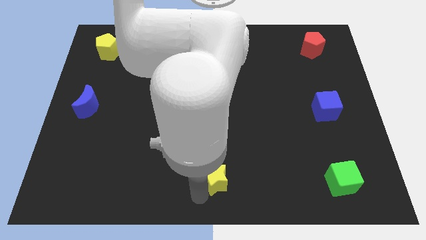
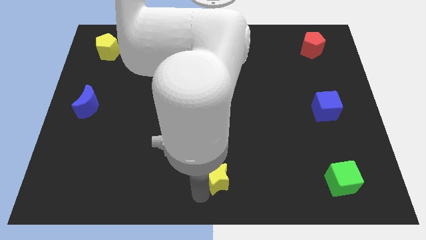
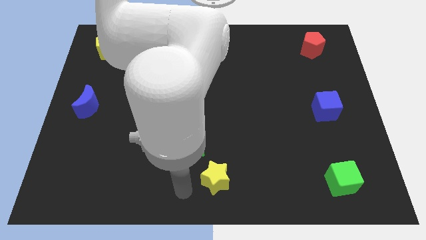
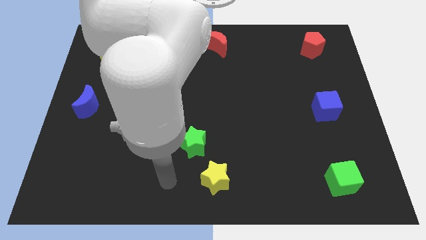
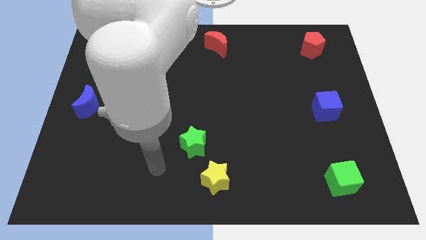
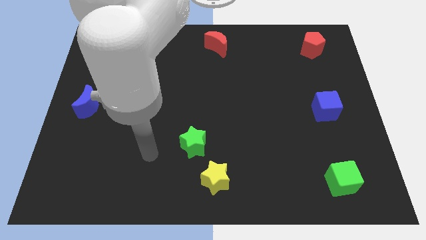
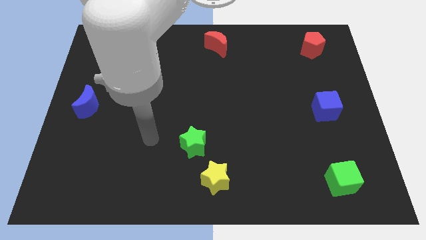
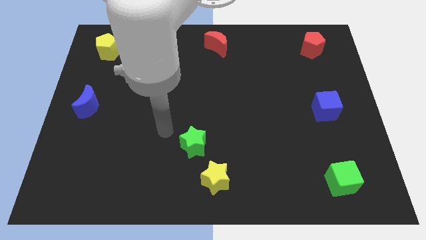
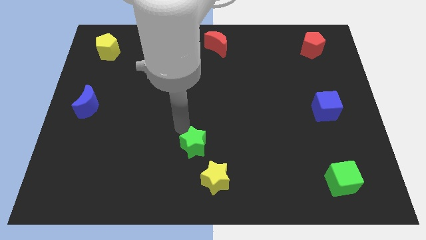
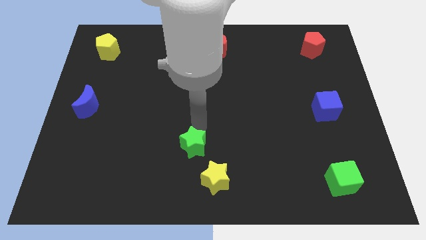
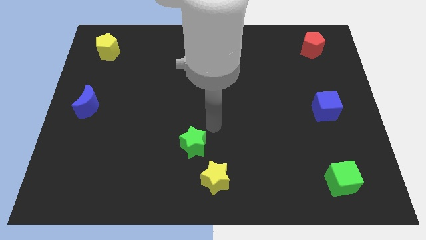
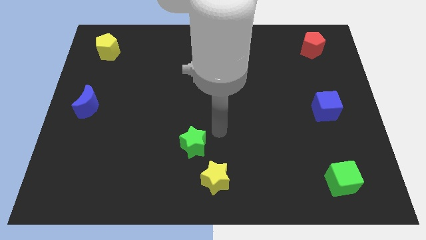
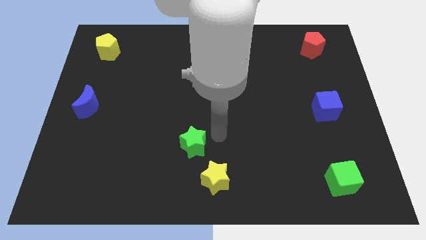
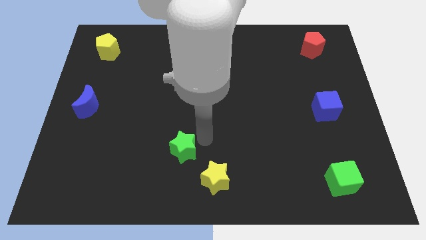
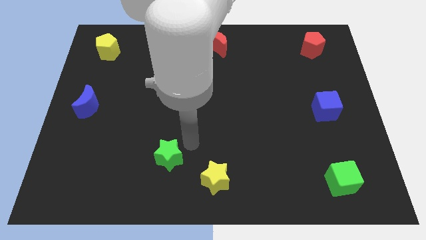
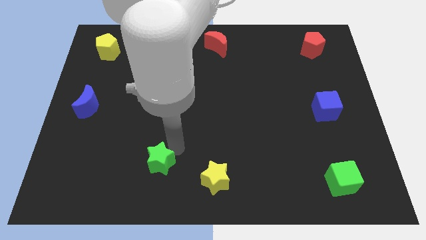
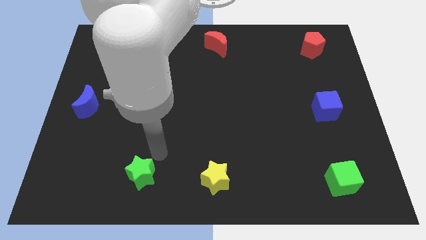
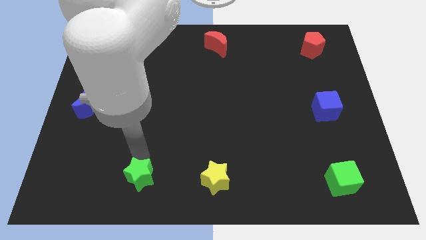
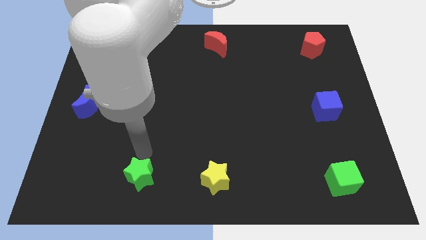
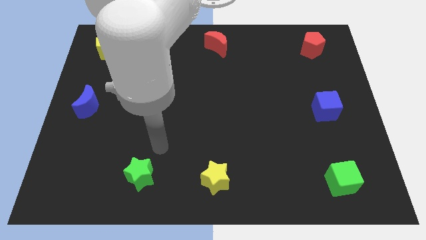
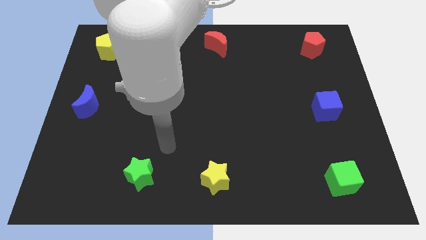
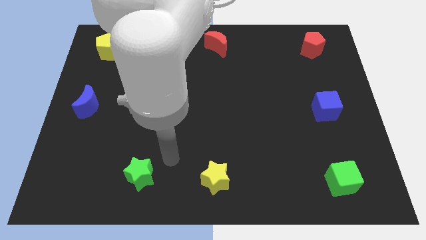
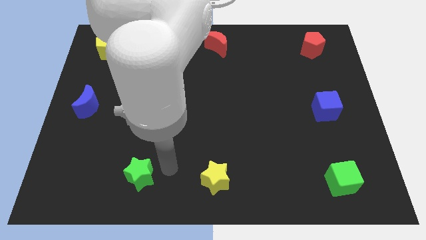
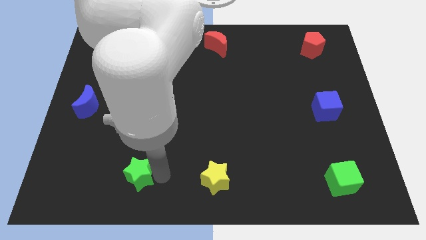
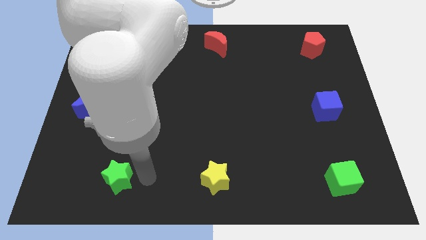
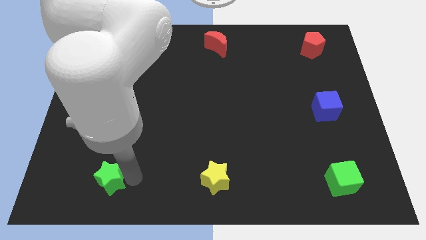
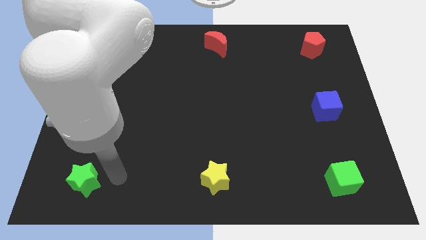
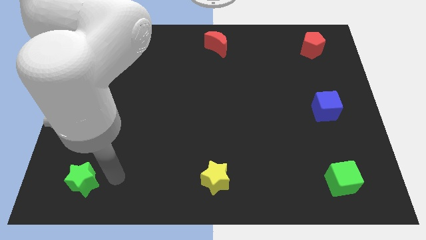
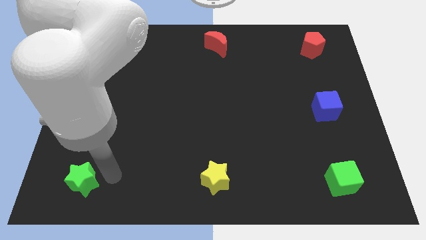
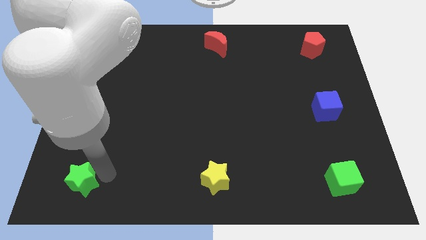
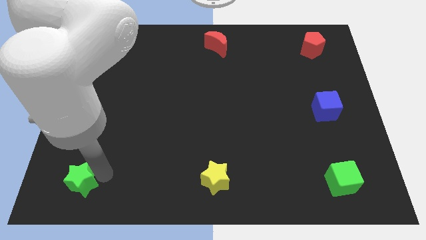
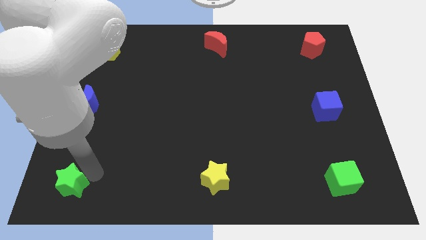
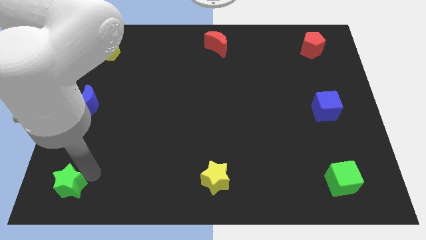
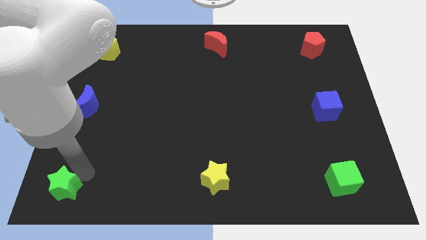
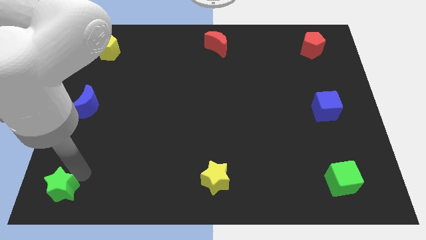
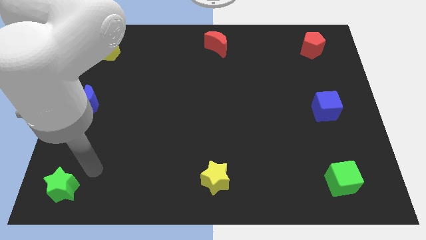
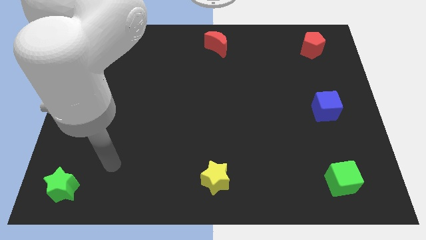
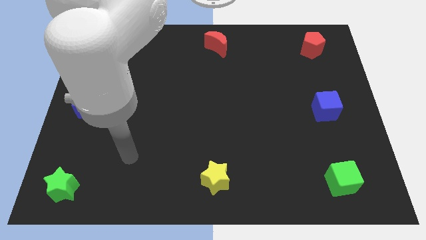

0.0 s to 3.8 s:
move the green star to the bottom left corner of the board

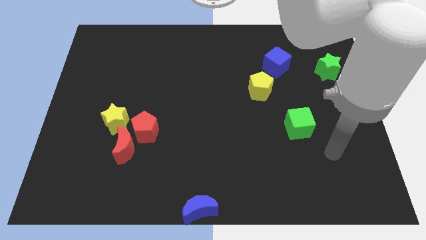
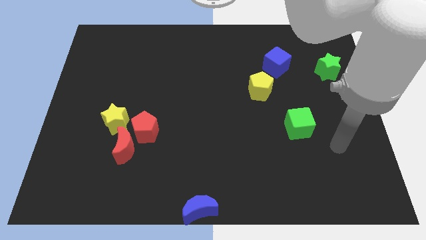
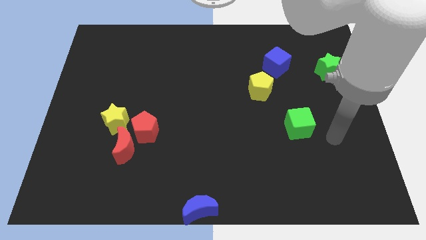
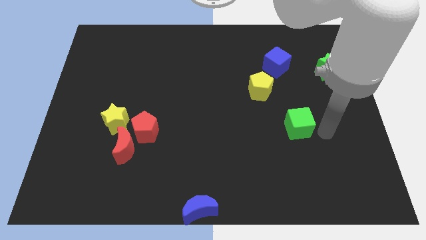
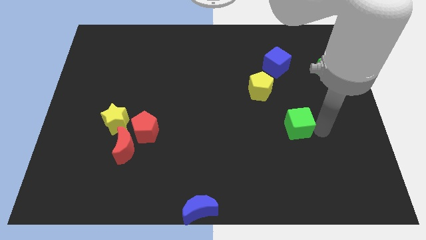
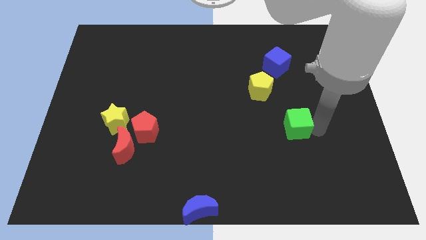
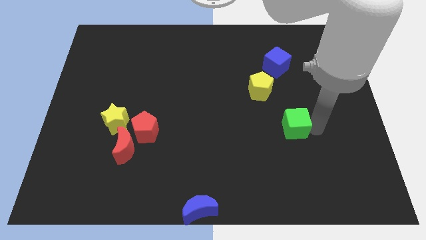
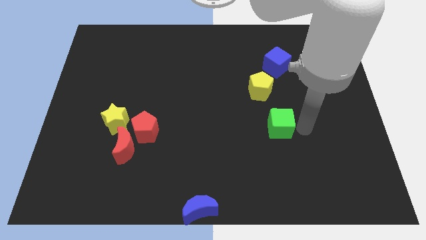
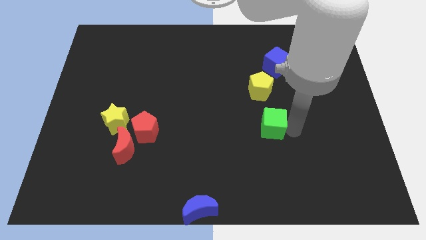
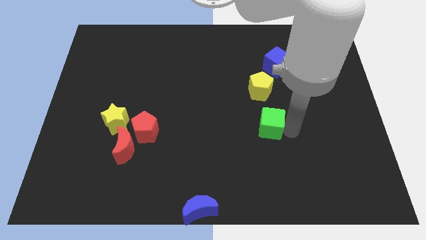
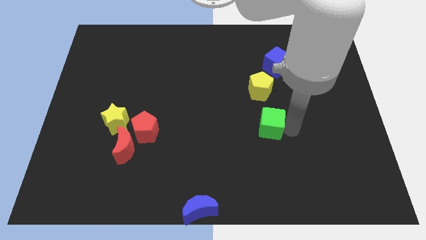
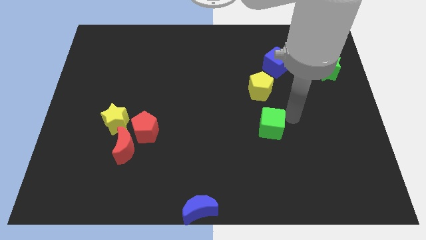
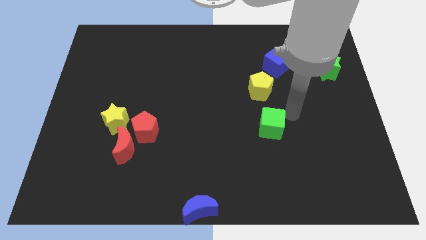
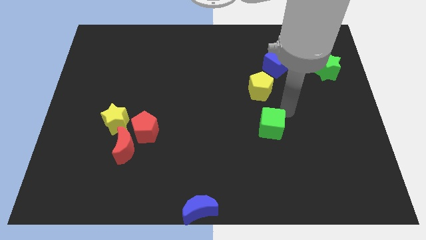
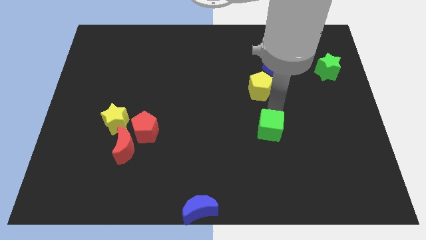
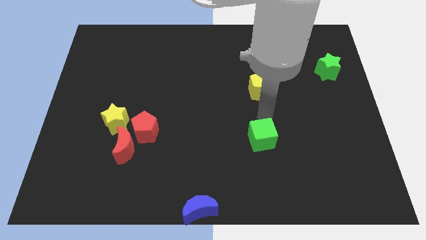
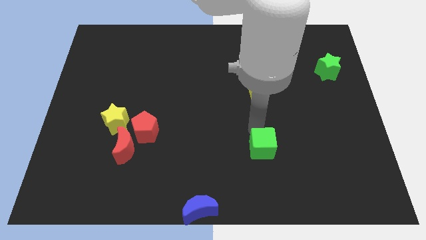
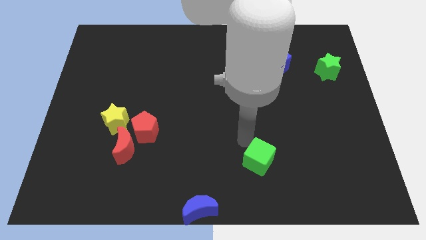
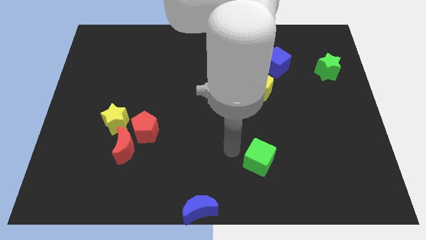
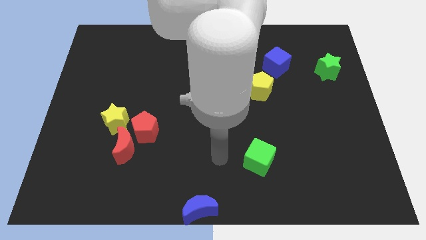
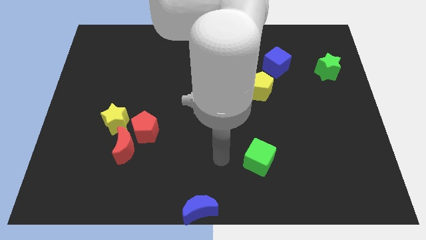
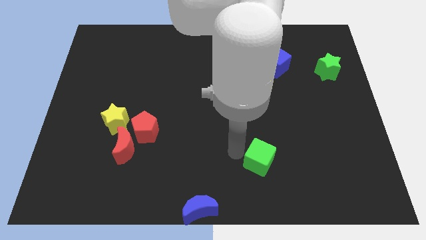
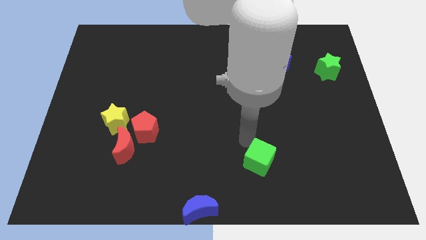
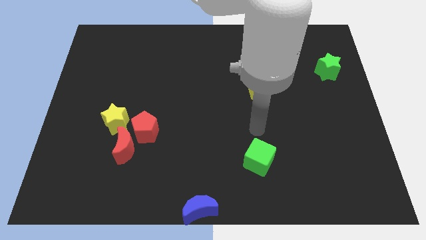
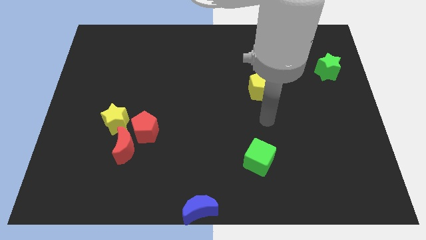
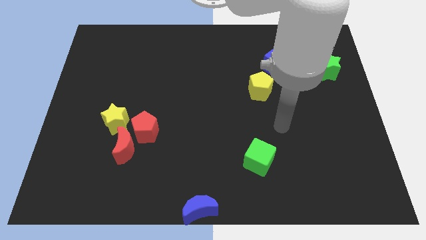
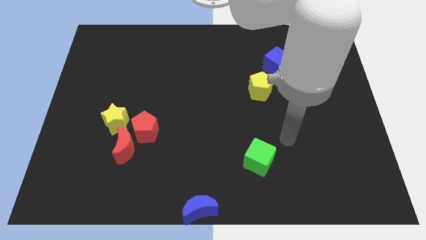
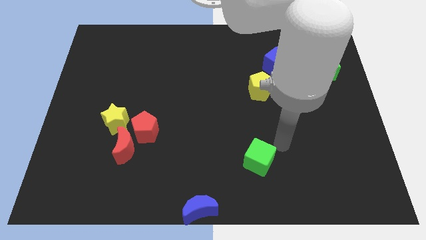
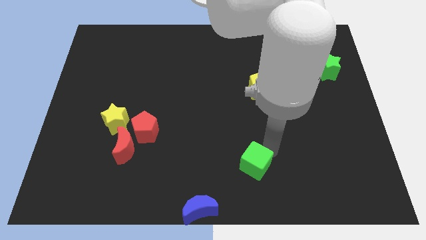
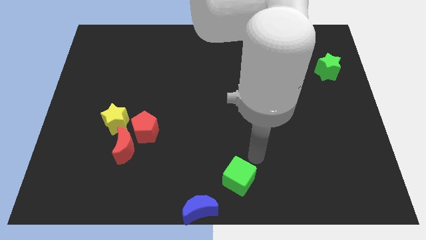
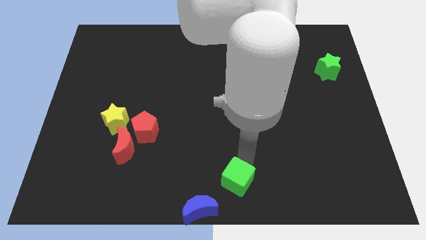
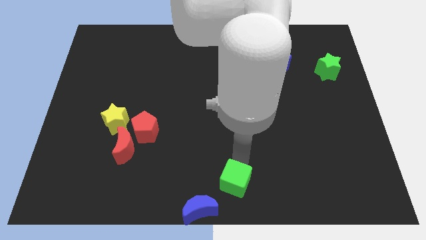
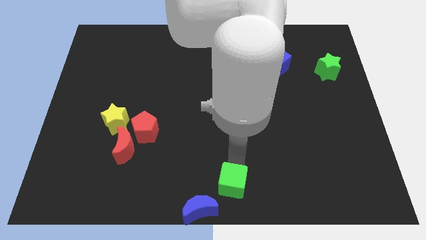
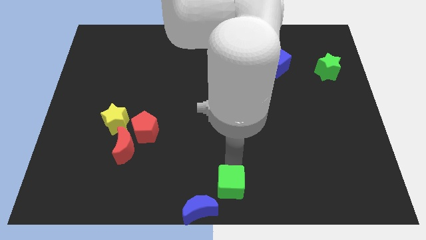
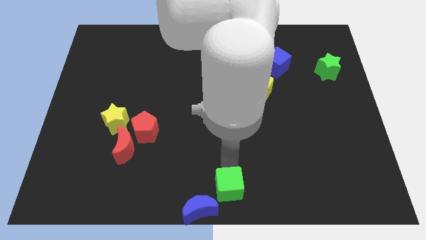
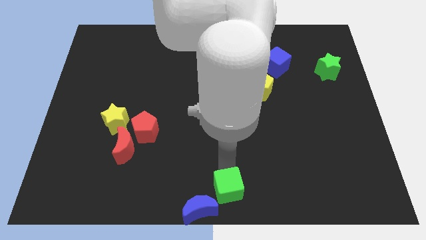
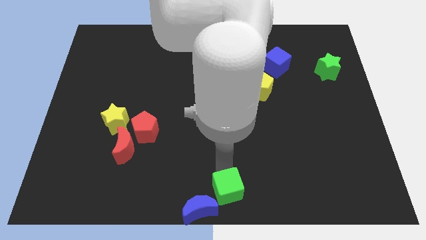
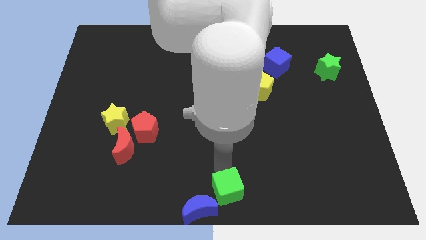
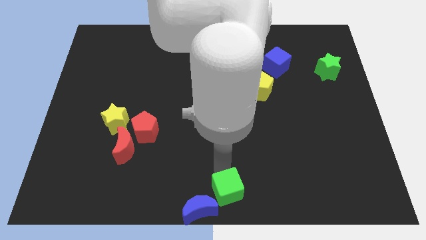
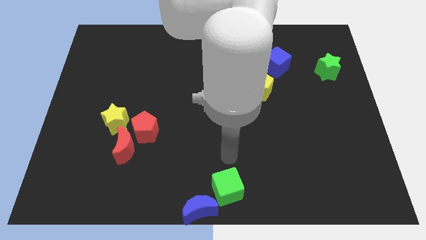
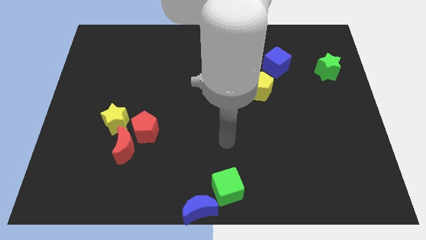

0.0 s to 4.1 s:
move green cube diagonal top right of blue moon

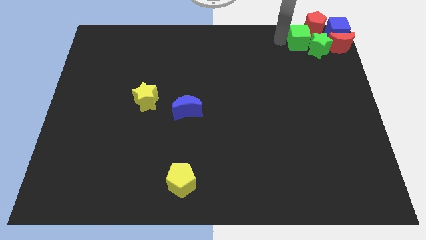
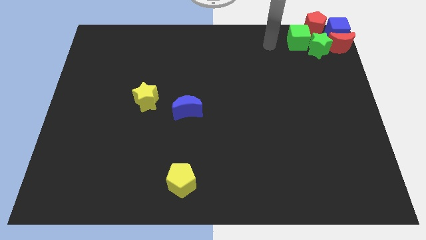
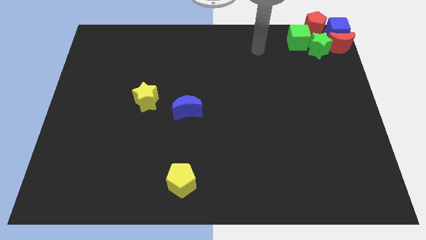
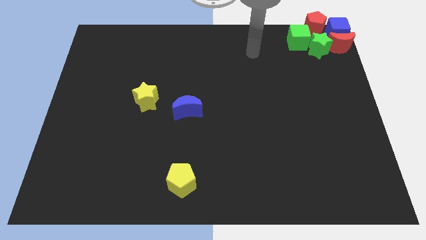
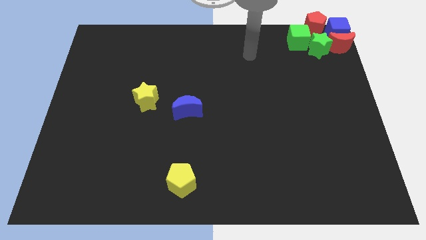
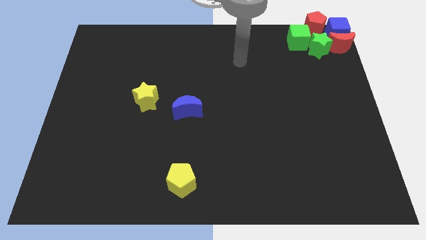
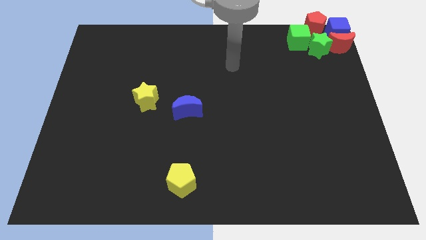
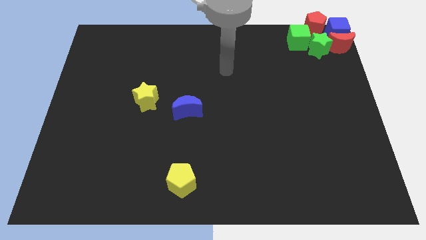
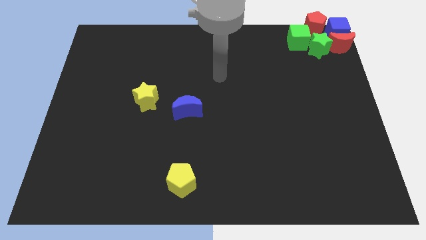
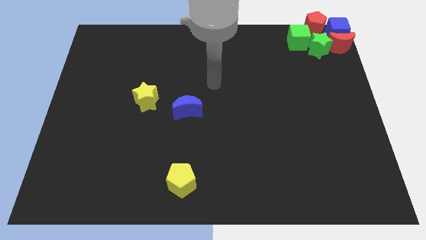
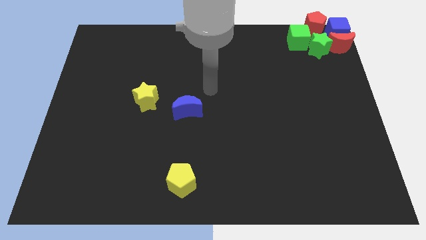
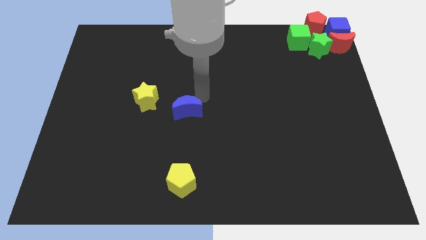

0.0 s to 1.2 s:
move the arm to the blue crescent
